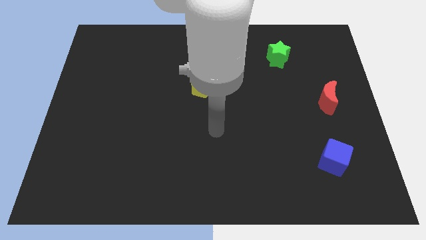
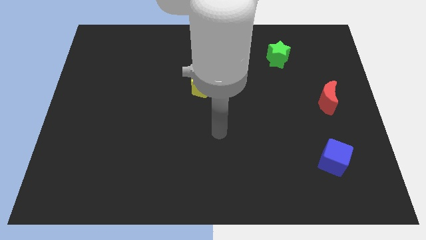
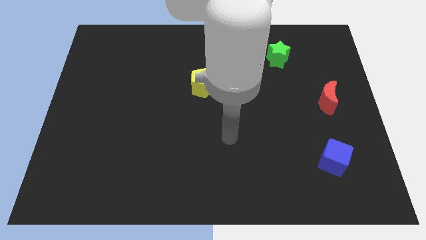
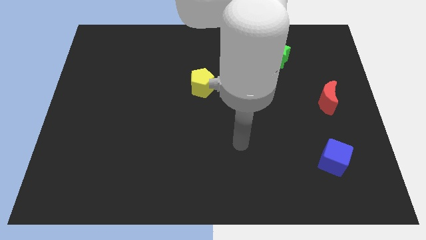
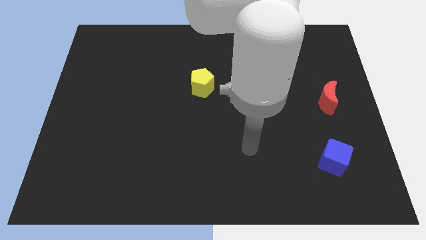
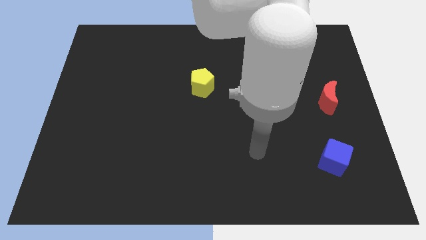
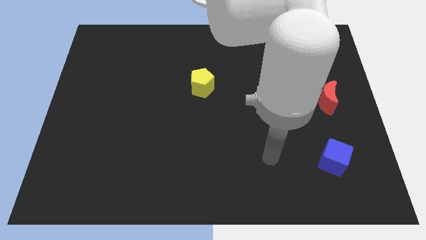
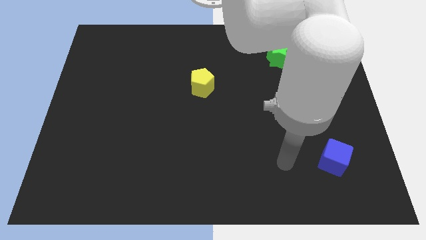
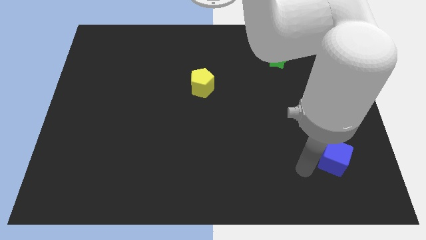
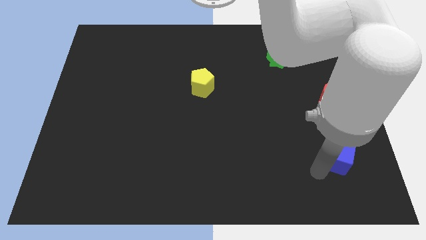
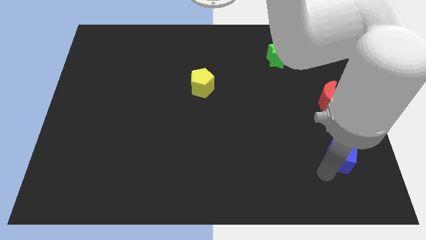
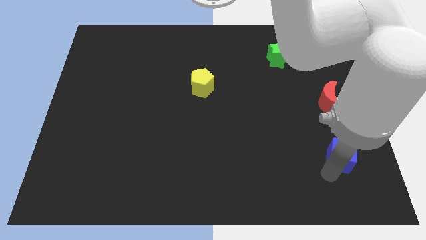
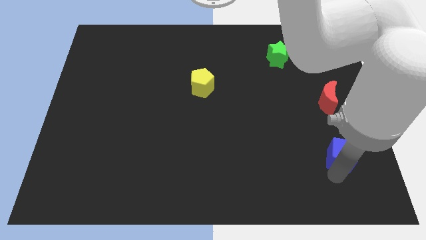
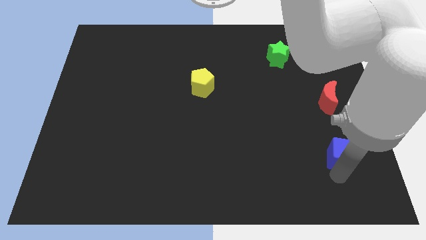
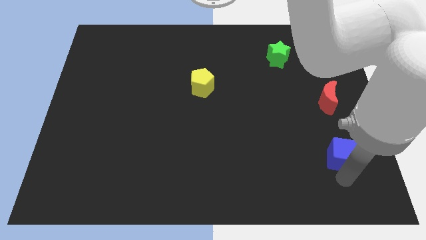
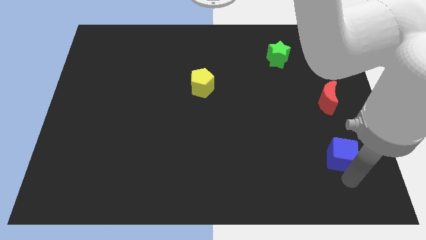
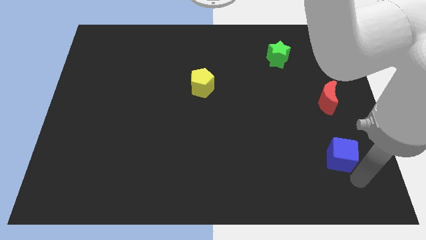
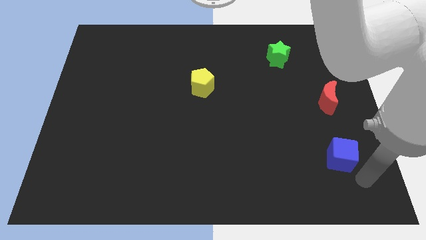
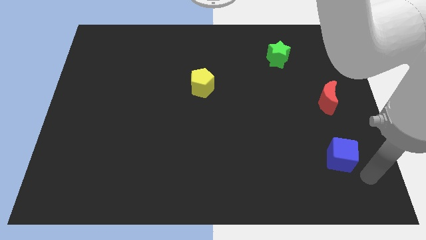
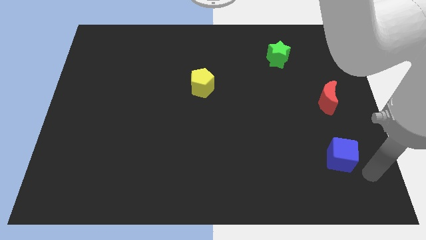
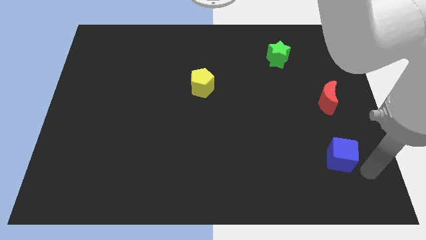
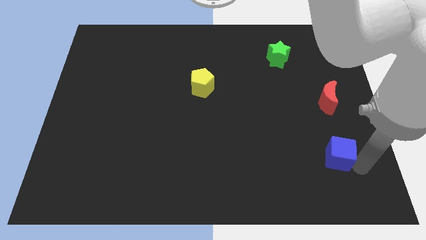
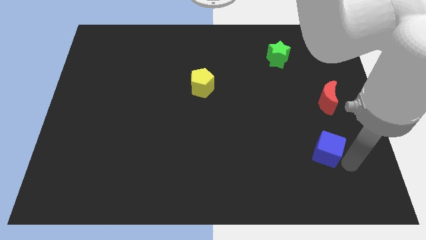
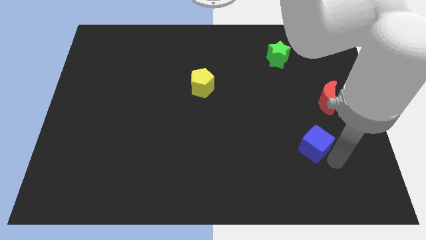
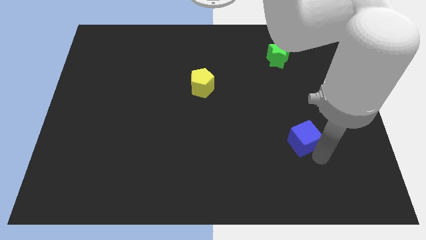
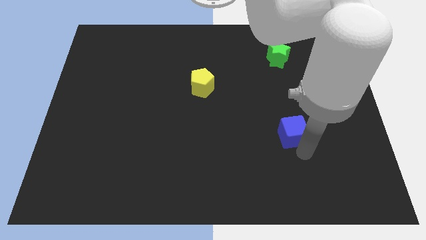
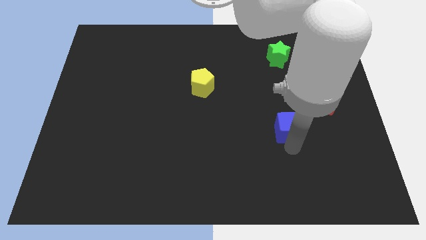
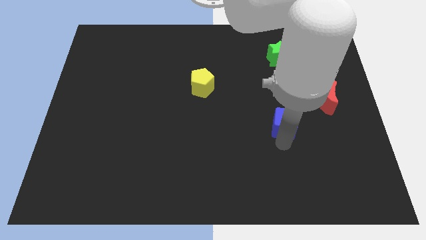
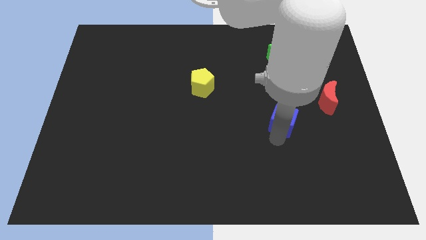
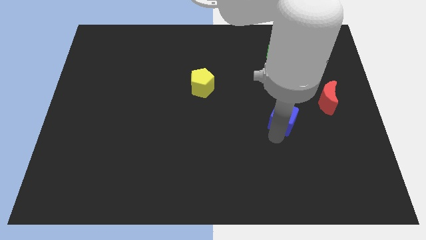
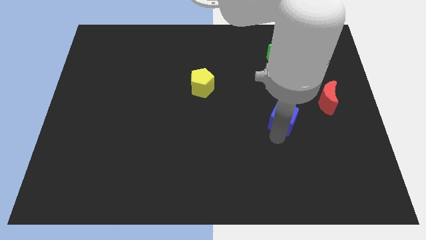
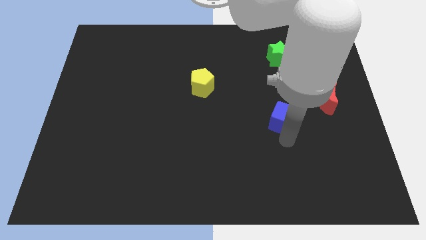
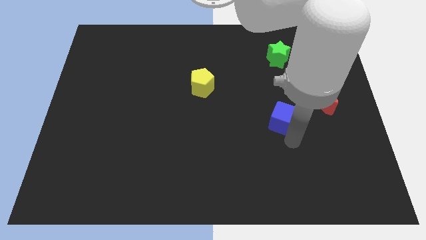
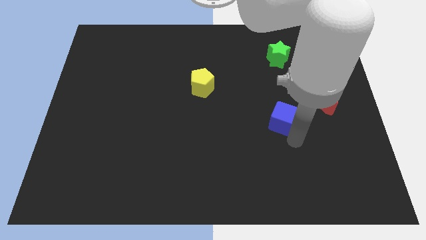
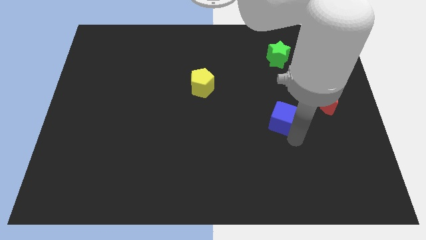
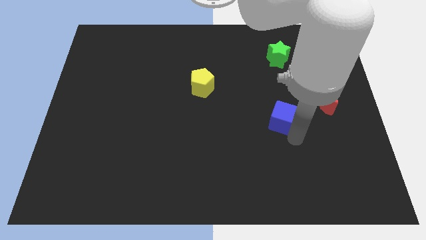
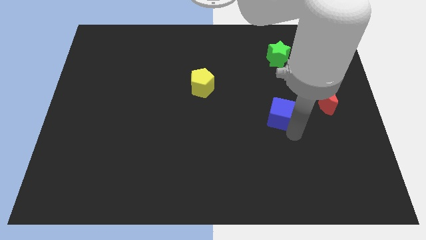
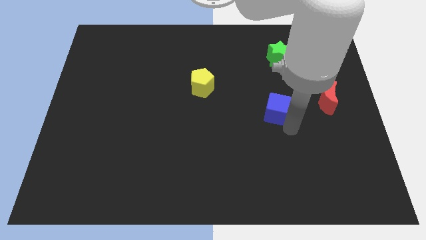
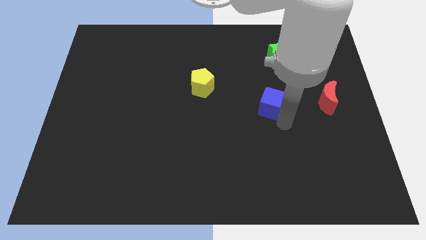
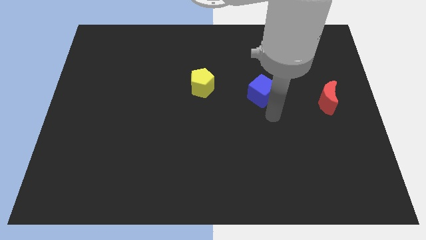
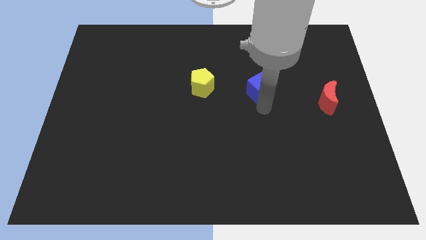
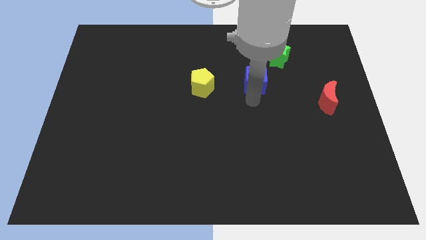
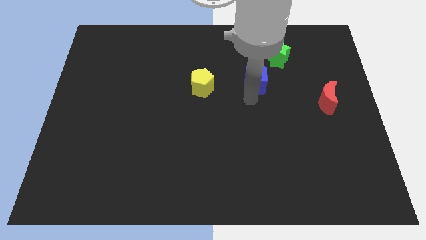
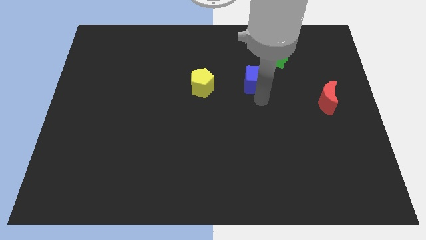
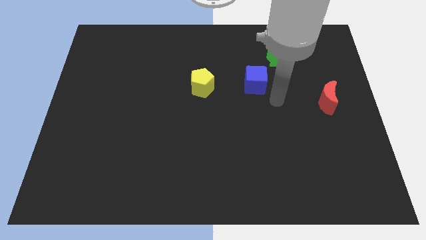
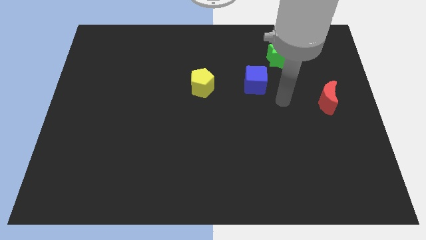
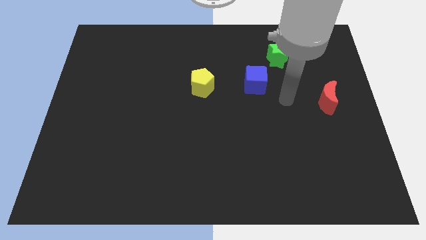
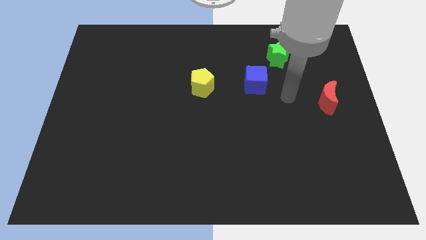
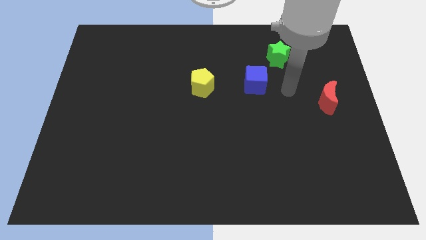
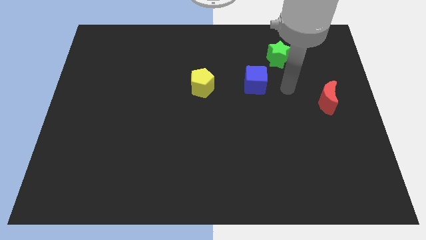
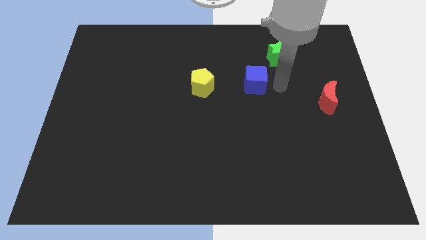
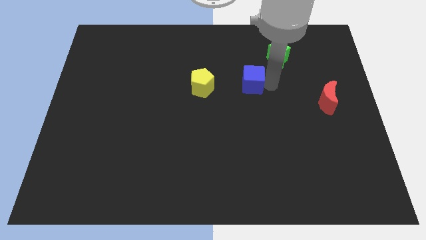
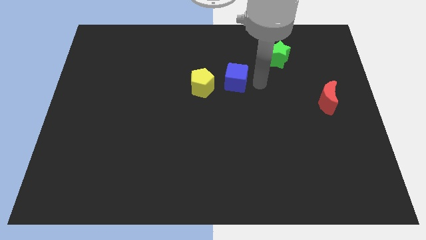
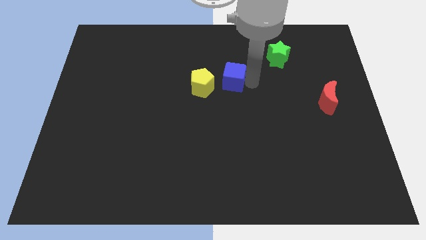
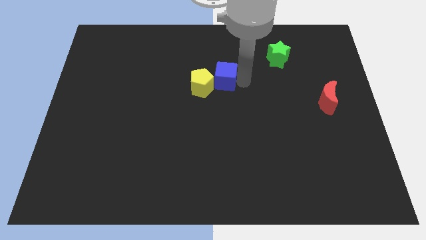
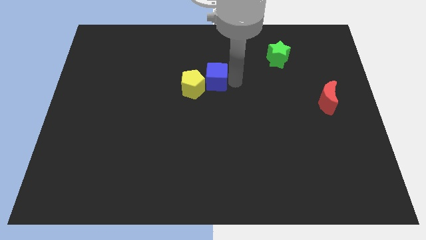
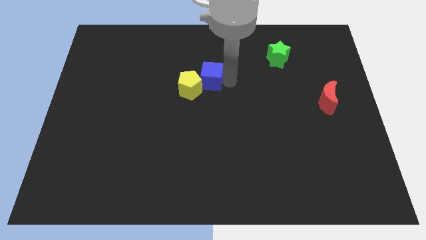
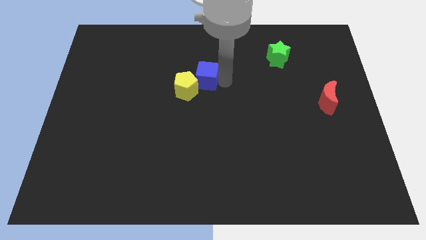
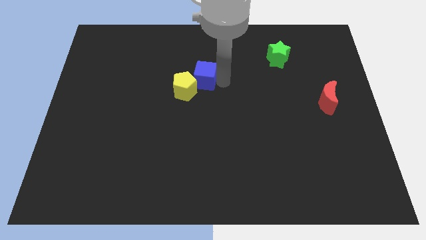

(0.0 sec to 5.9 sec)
put the blue cube towards the yellow block

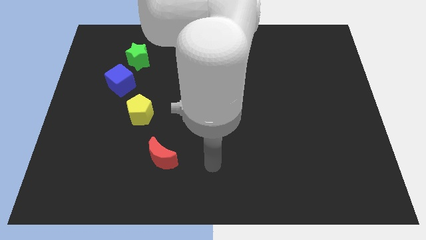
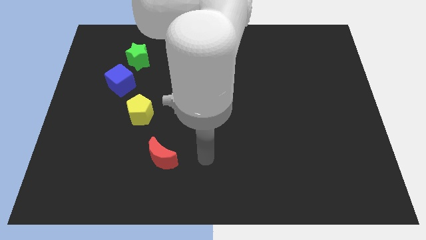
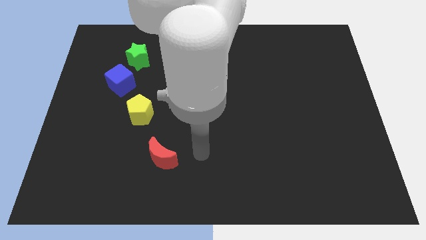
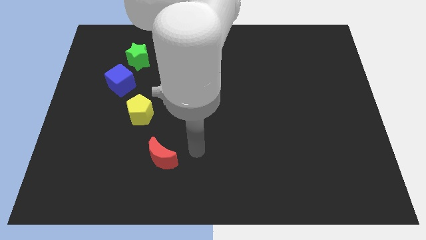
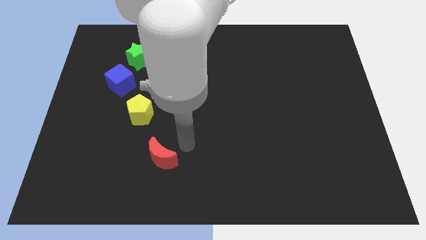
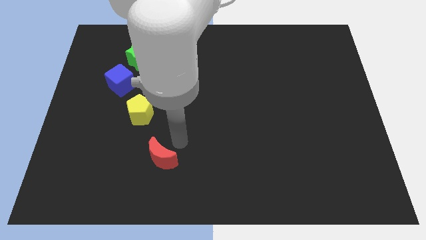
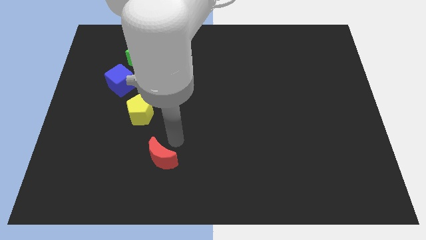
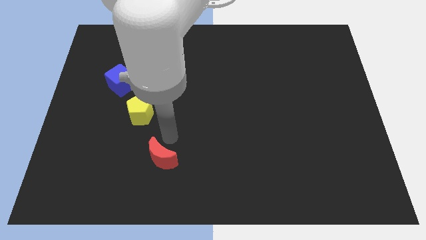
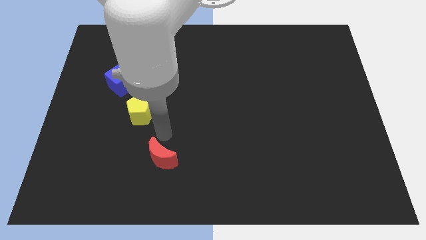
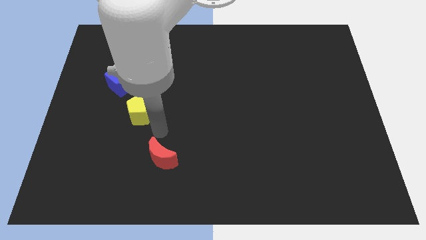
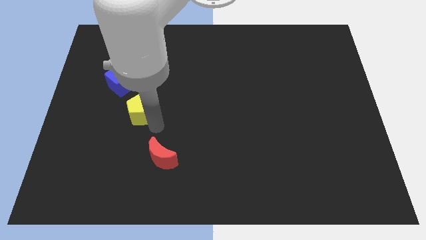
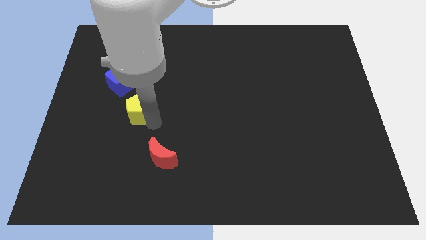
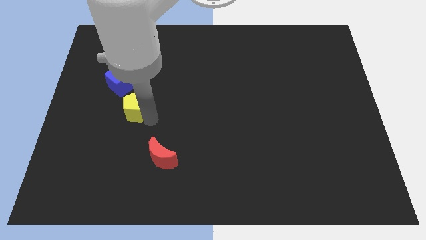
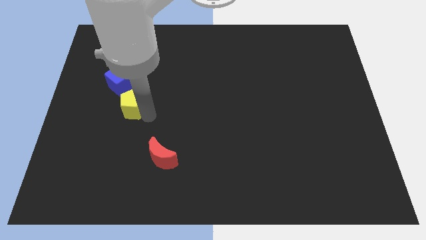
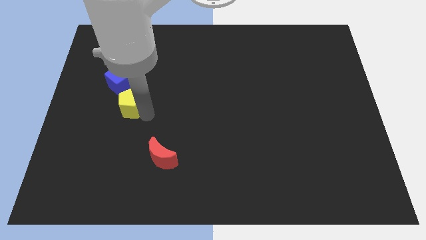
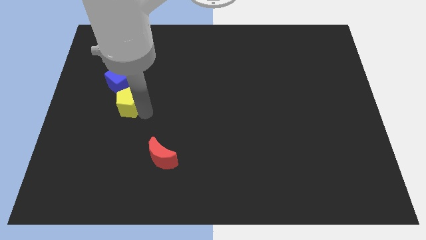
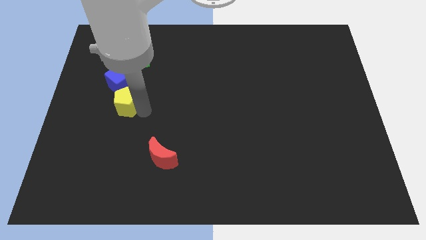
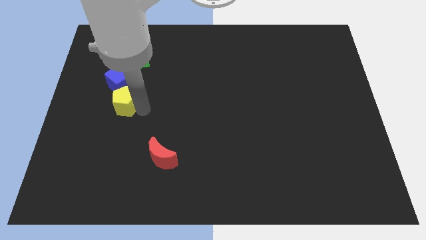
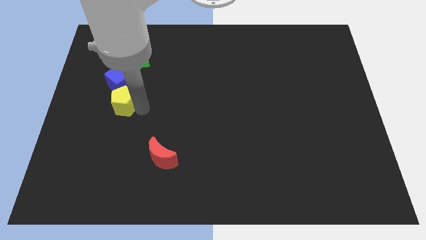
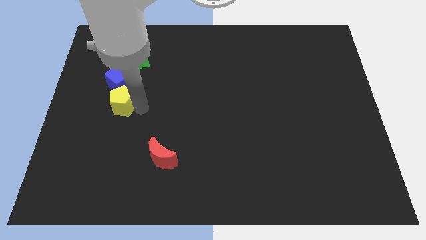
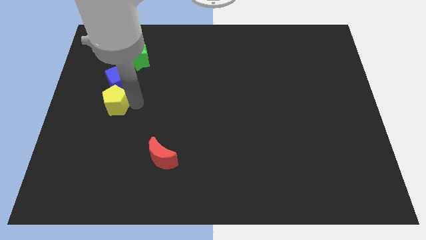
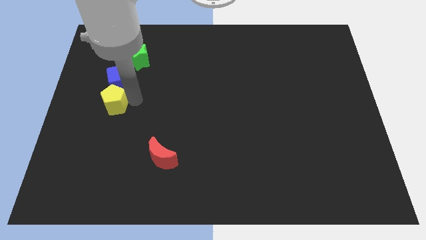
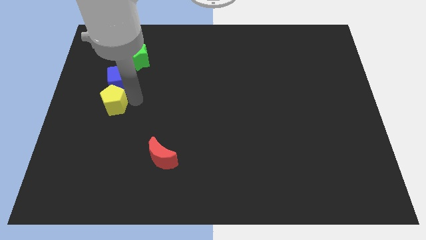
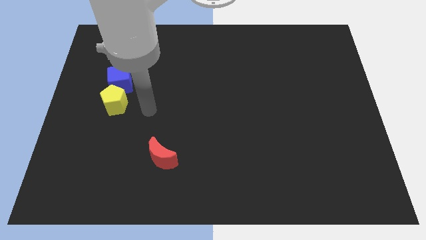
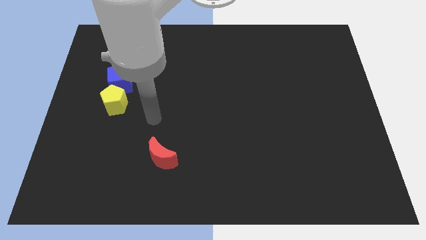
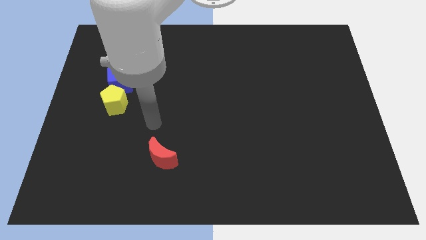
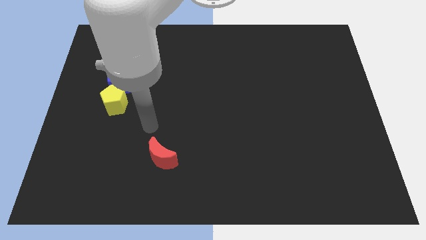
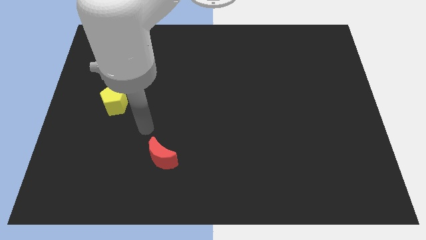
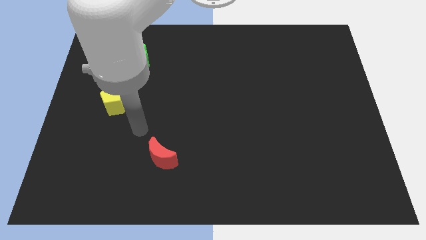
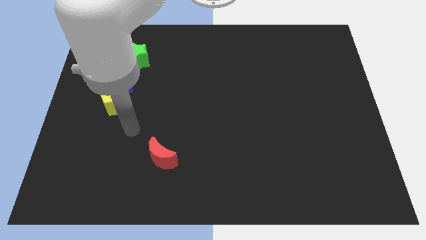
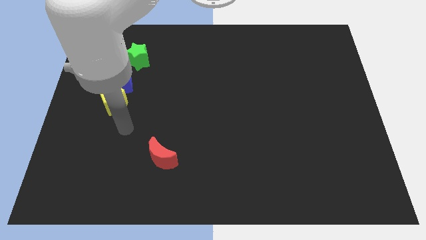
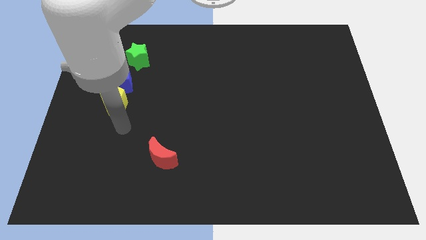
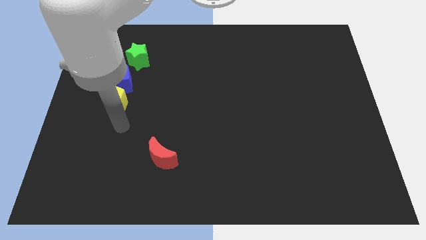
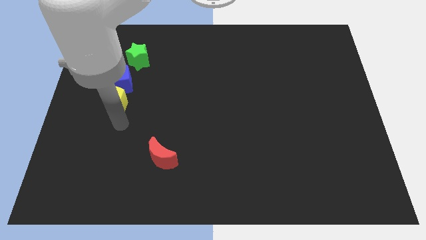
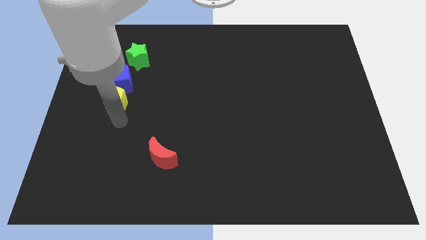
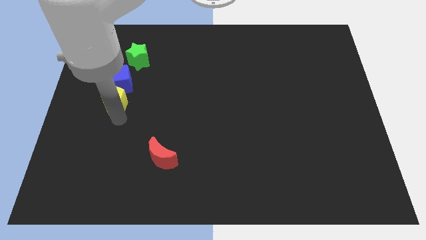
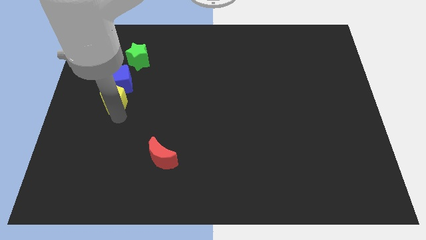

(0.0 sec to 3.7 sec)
put the pentagon next to the cube
